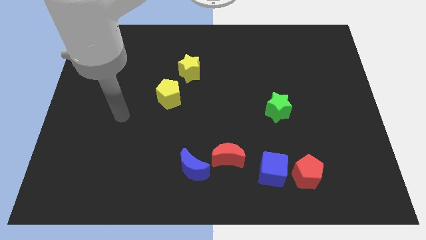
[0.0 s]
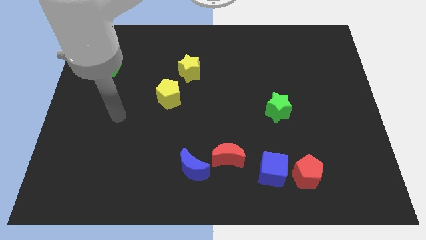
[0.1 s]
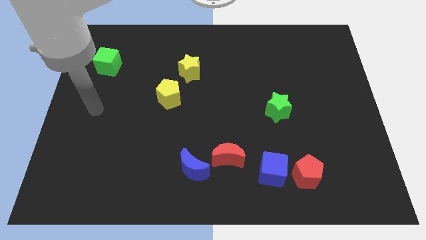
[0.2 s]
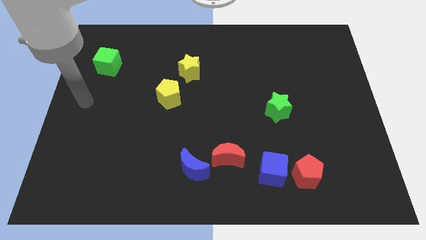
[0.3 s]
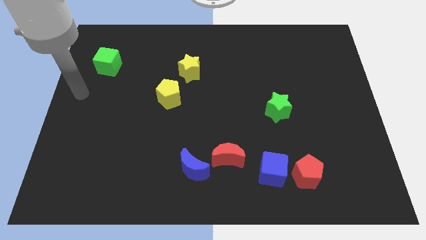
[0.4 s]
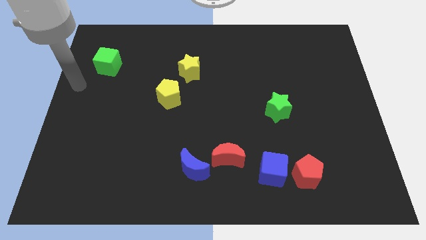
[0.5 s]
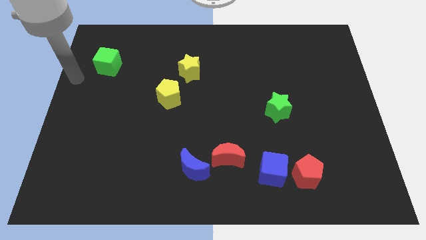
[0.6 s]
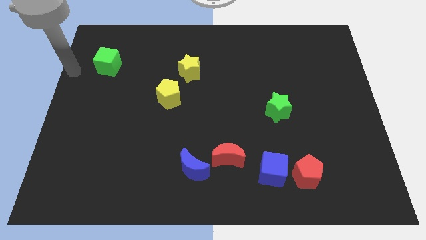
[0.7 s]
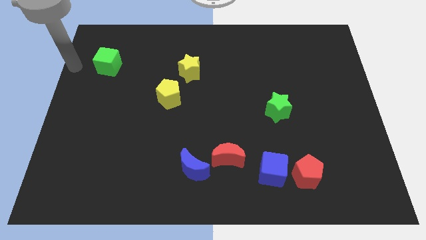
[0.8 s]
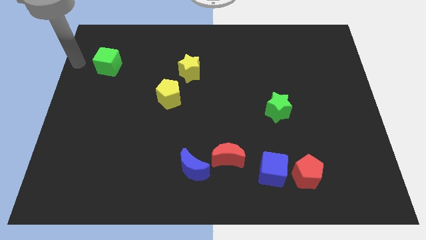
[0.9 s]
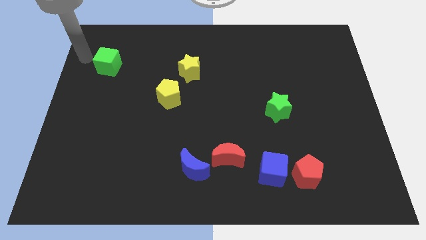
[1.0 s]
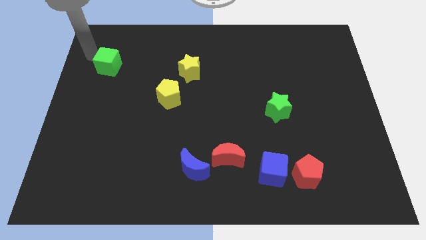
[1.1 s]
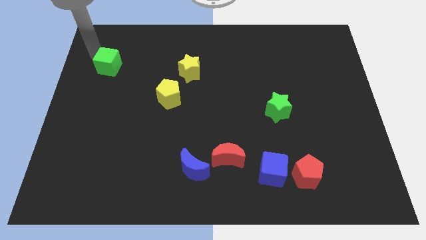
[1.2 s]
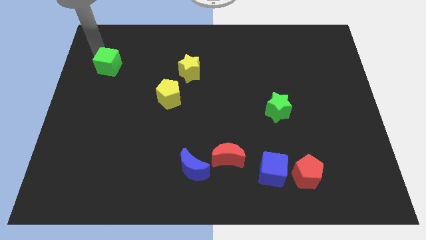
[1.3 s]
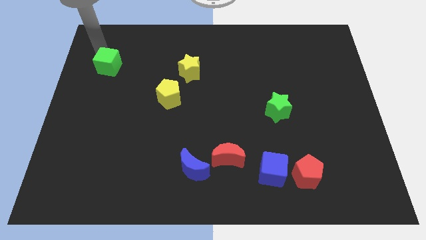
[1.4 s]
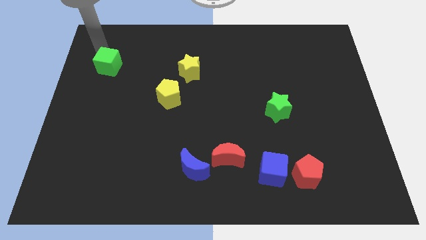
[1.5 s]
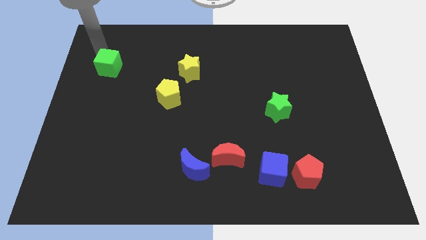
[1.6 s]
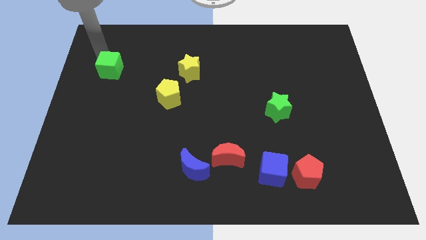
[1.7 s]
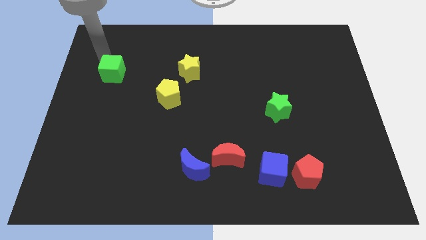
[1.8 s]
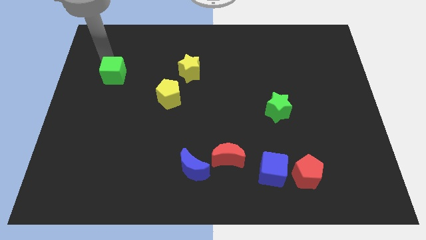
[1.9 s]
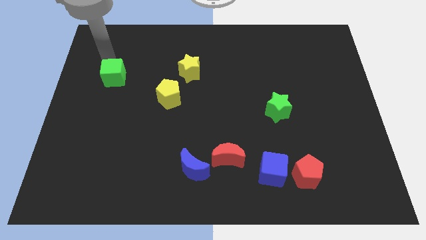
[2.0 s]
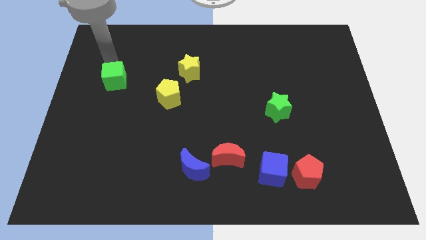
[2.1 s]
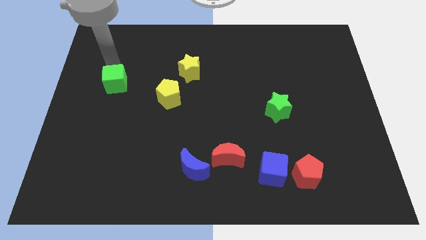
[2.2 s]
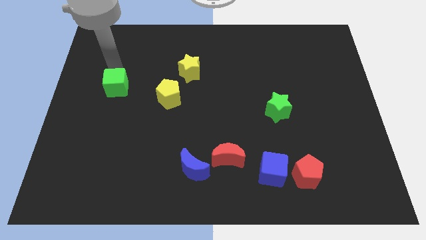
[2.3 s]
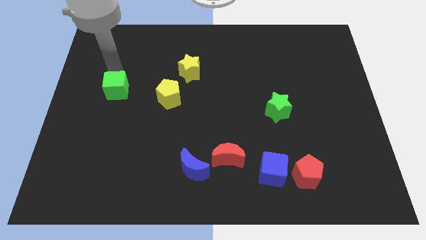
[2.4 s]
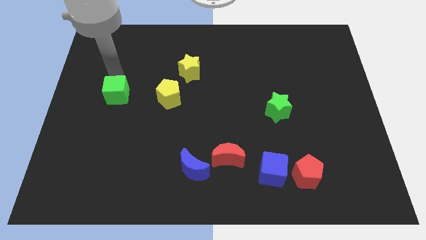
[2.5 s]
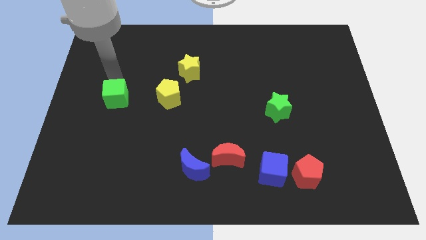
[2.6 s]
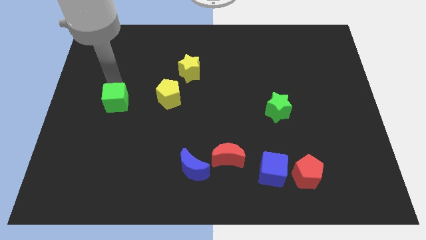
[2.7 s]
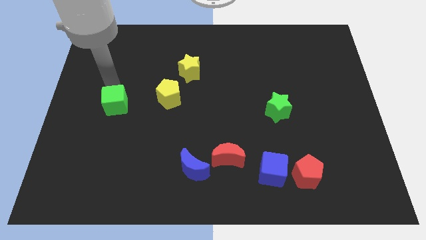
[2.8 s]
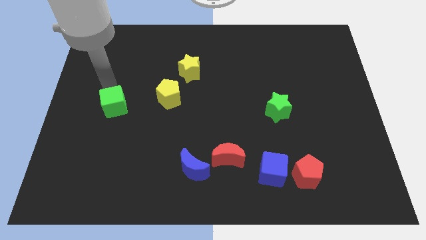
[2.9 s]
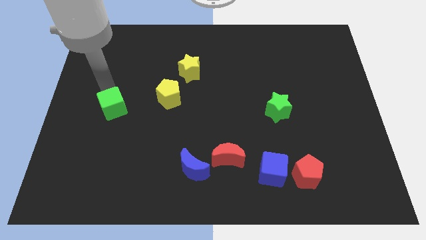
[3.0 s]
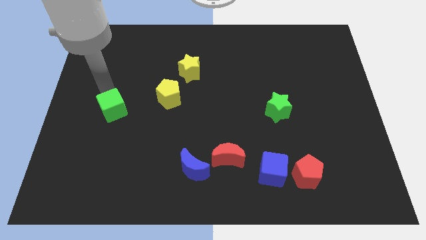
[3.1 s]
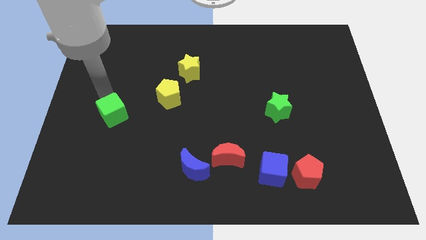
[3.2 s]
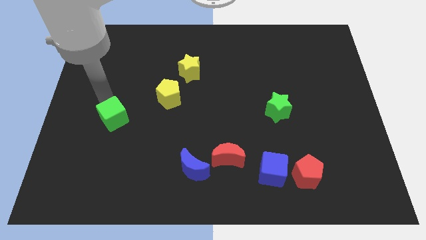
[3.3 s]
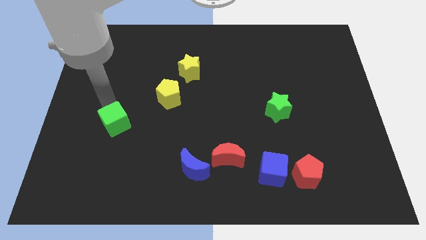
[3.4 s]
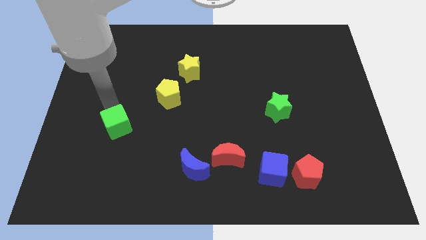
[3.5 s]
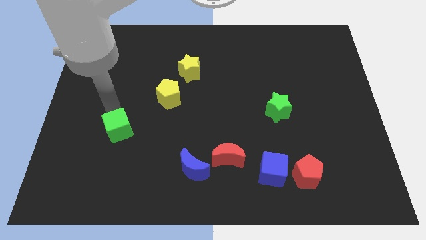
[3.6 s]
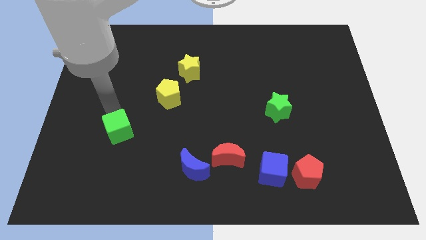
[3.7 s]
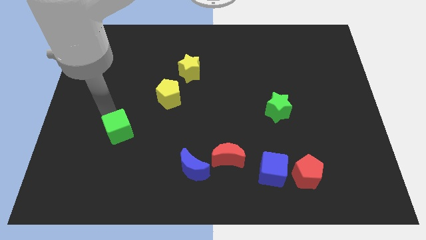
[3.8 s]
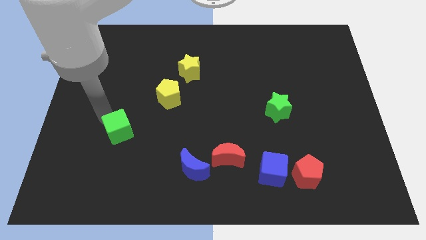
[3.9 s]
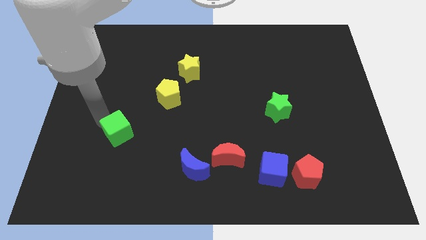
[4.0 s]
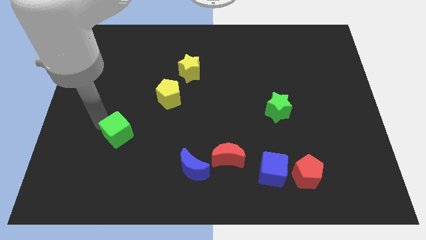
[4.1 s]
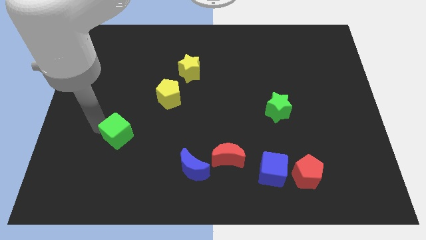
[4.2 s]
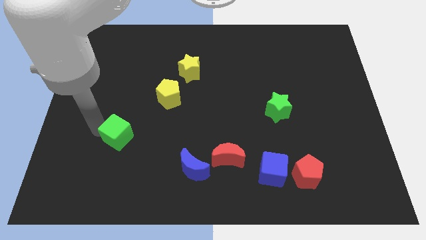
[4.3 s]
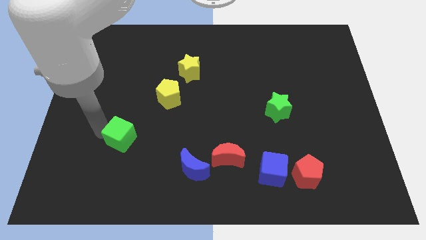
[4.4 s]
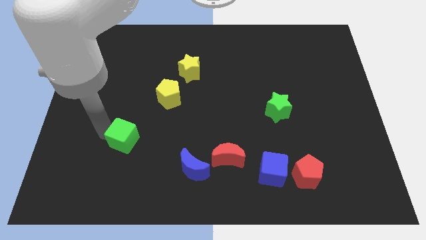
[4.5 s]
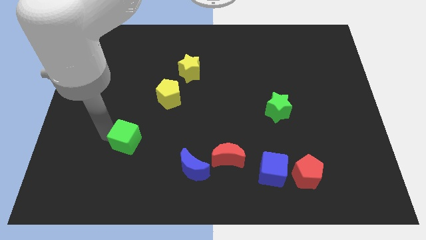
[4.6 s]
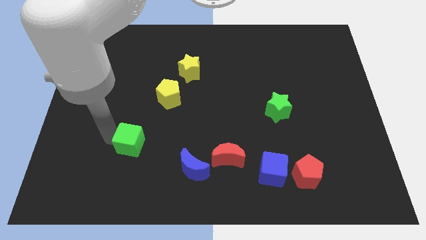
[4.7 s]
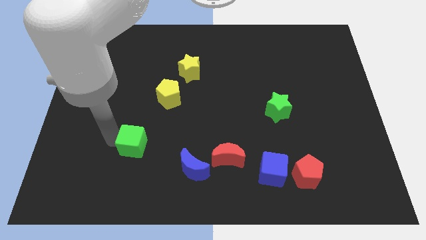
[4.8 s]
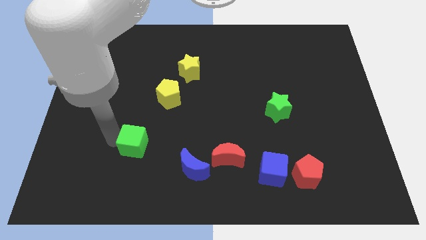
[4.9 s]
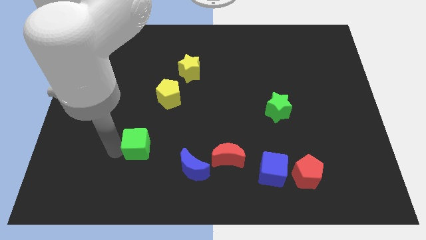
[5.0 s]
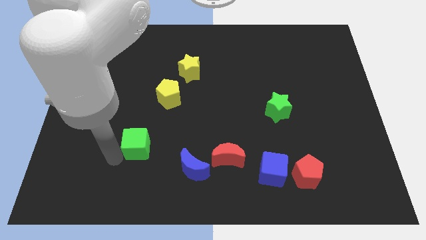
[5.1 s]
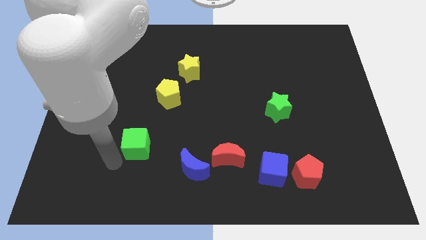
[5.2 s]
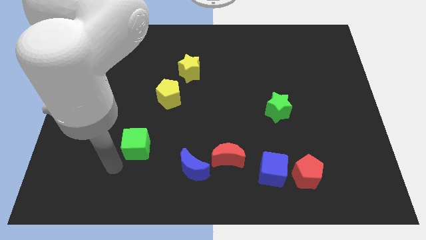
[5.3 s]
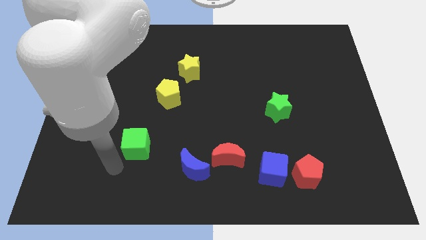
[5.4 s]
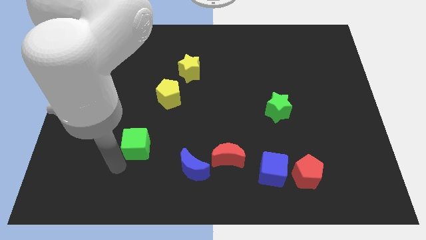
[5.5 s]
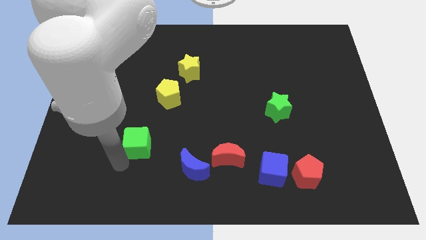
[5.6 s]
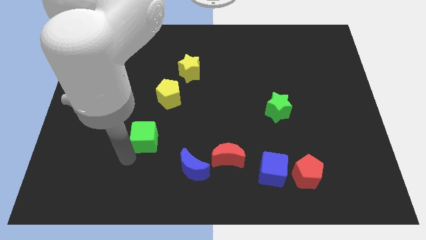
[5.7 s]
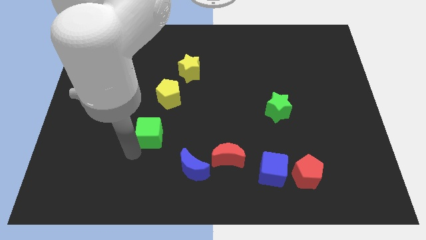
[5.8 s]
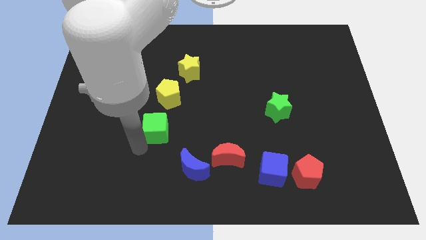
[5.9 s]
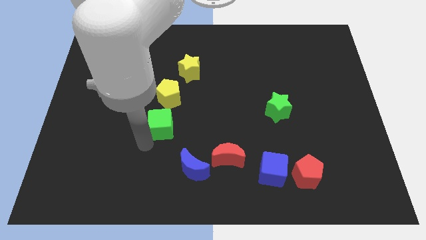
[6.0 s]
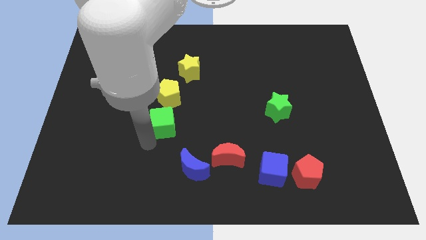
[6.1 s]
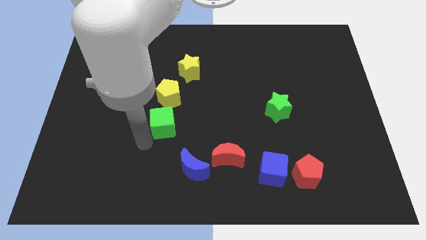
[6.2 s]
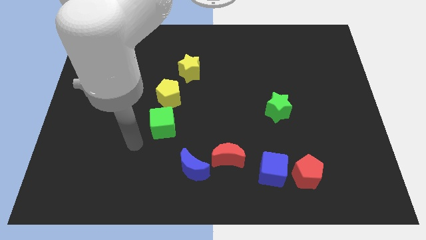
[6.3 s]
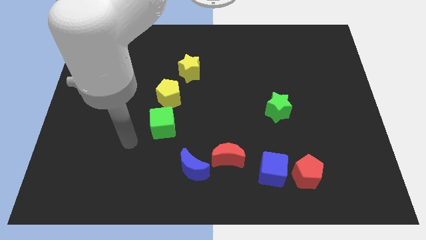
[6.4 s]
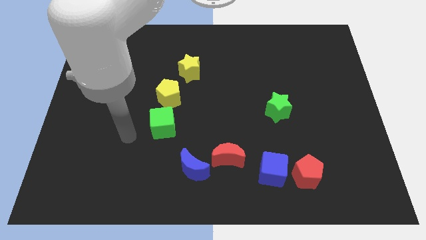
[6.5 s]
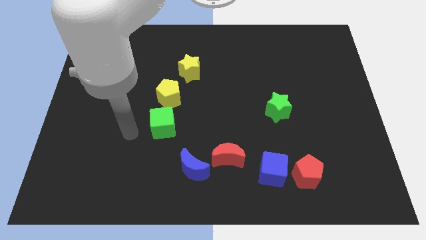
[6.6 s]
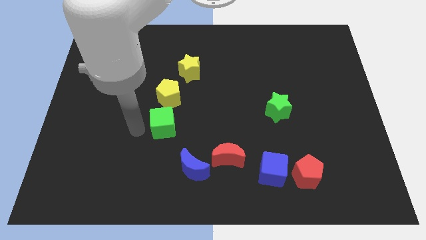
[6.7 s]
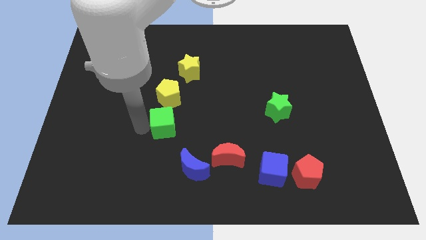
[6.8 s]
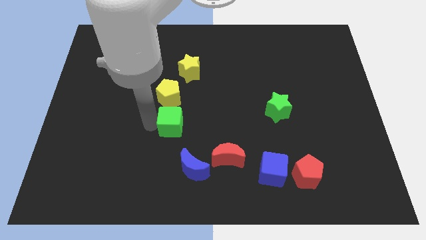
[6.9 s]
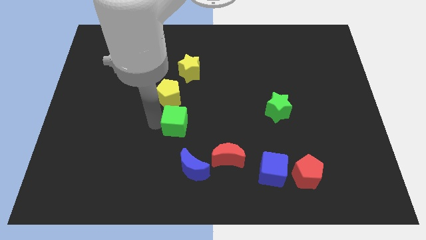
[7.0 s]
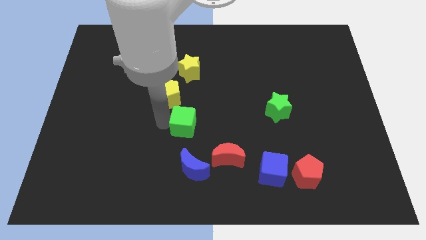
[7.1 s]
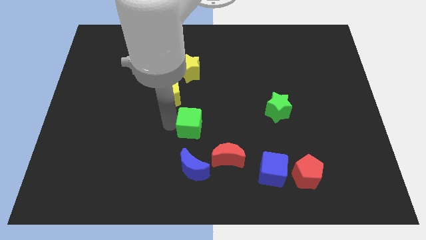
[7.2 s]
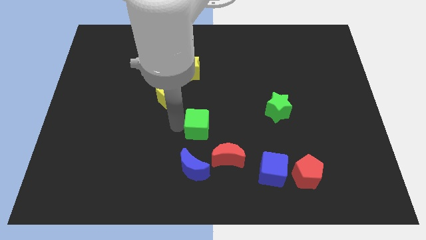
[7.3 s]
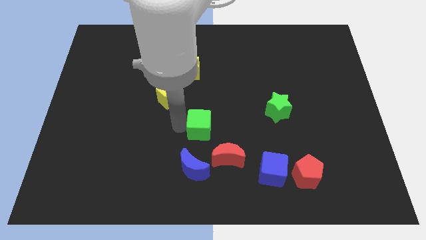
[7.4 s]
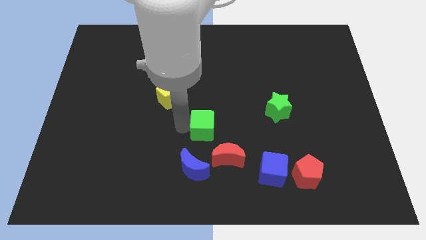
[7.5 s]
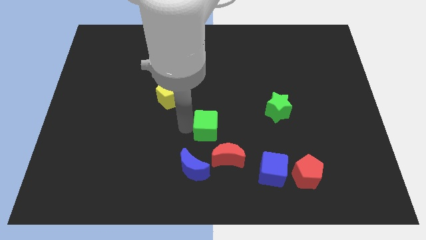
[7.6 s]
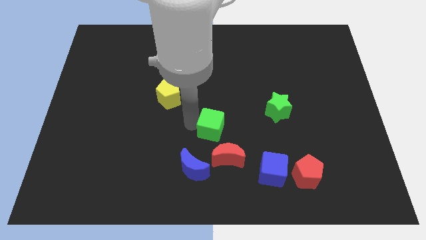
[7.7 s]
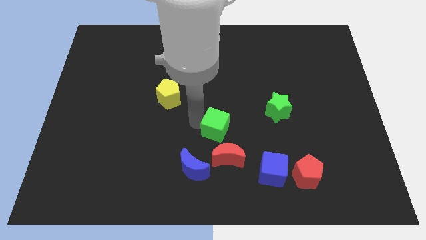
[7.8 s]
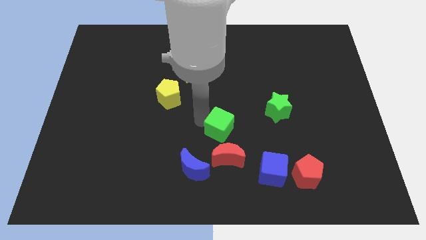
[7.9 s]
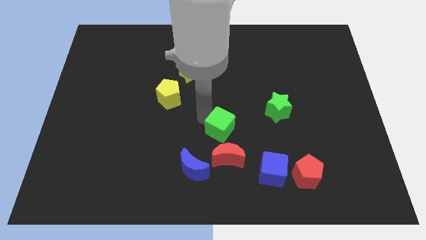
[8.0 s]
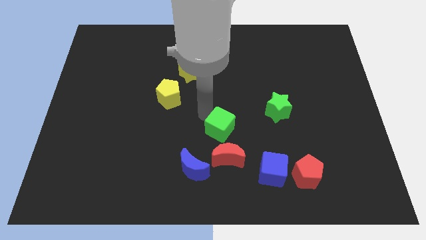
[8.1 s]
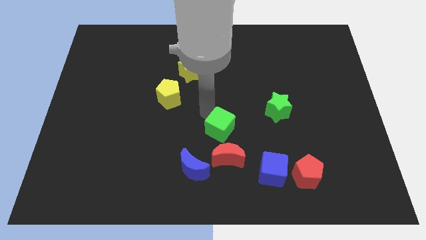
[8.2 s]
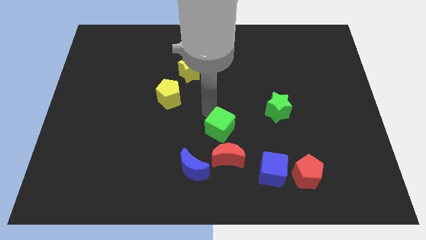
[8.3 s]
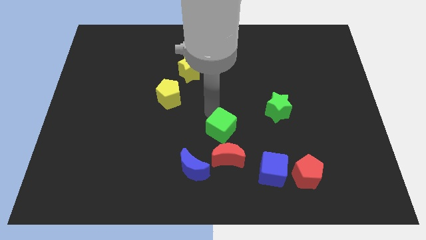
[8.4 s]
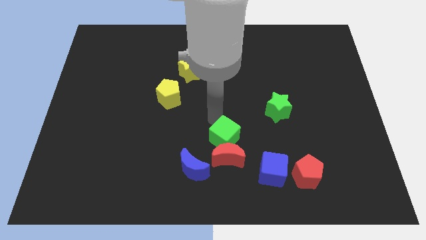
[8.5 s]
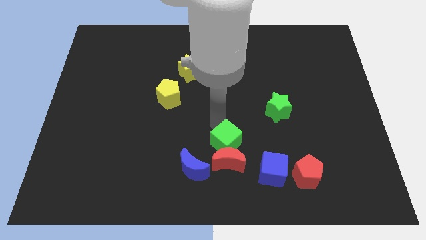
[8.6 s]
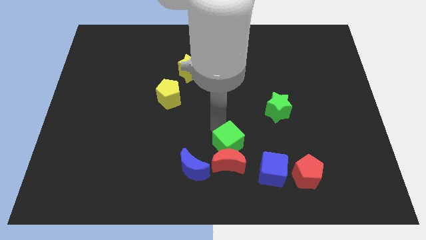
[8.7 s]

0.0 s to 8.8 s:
move the green cube close to the red moon
